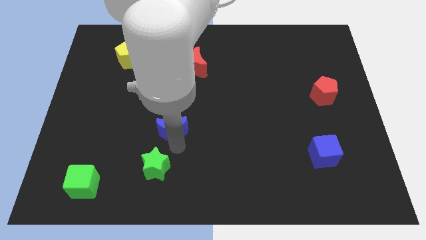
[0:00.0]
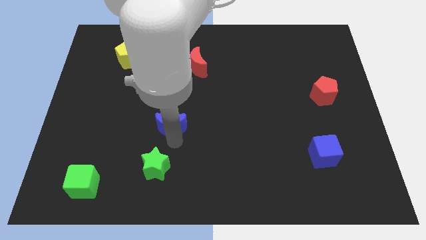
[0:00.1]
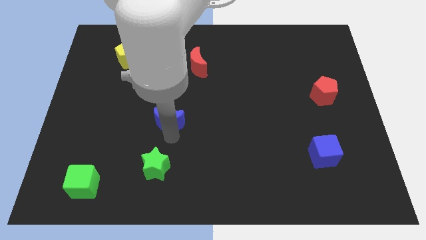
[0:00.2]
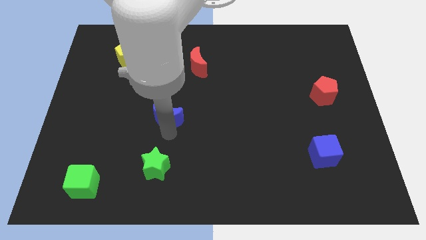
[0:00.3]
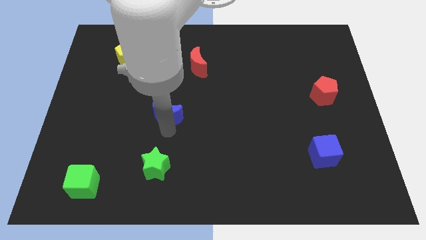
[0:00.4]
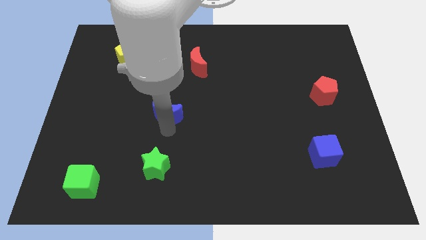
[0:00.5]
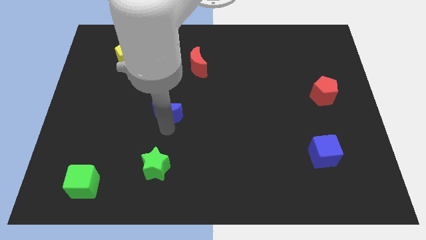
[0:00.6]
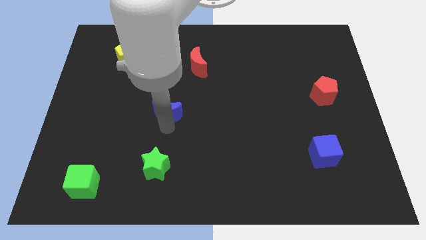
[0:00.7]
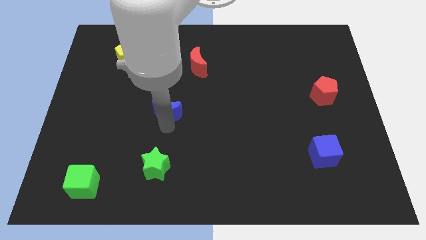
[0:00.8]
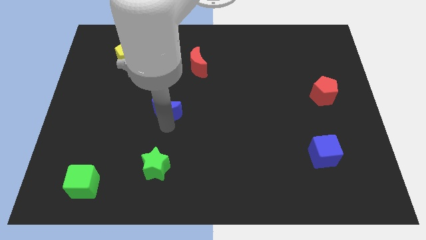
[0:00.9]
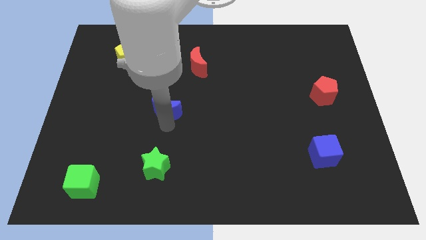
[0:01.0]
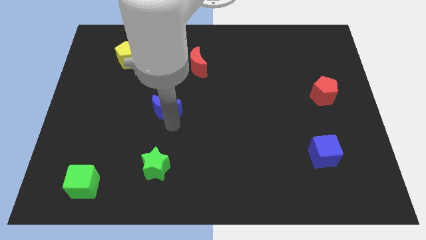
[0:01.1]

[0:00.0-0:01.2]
move blue moon above the green star

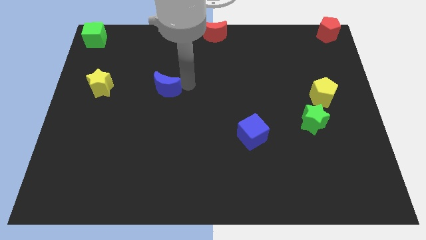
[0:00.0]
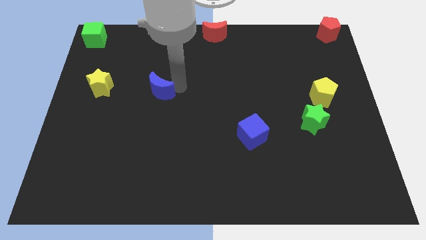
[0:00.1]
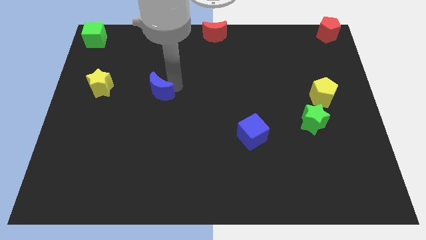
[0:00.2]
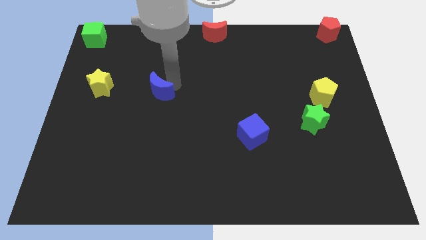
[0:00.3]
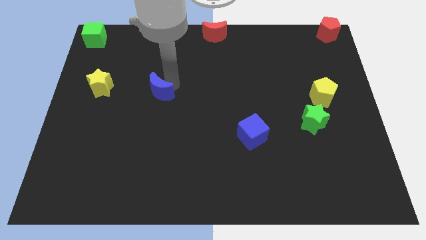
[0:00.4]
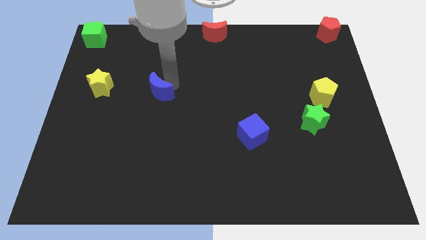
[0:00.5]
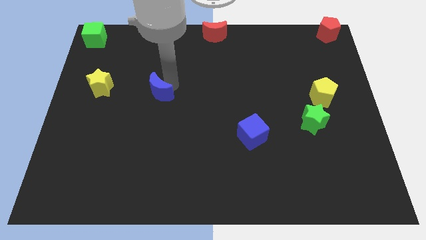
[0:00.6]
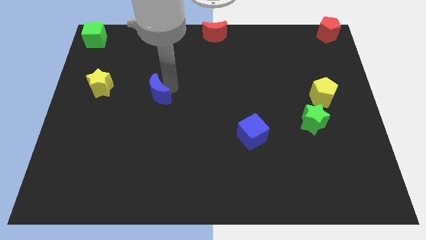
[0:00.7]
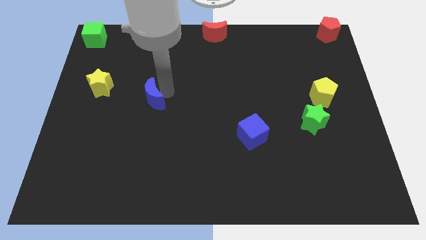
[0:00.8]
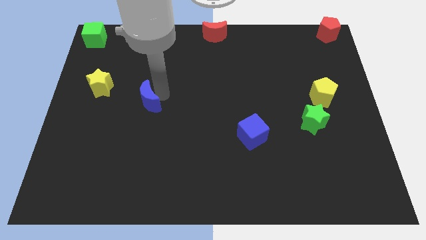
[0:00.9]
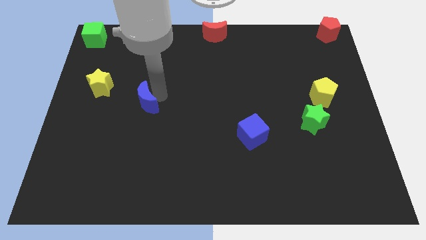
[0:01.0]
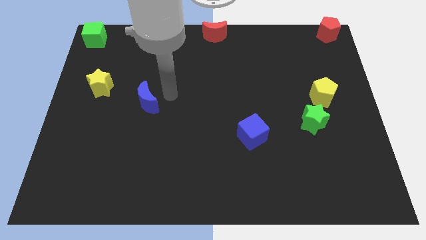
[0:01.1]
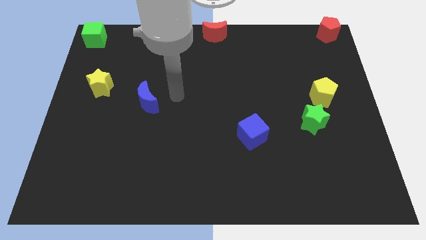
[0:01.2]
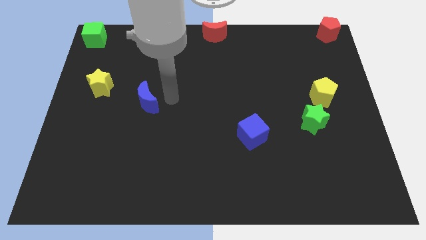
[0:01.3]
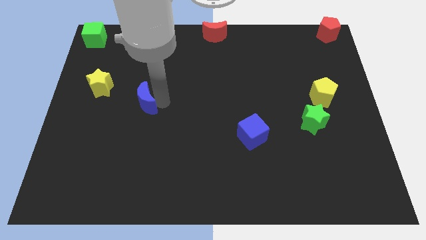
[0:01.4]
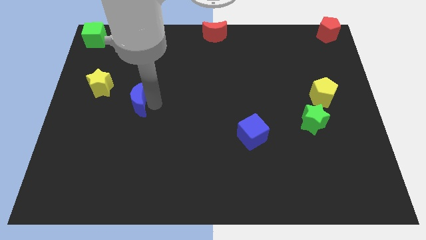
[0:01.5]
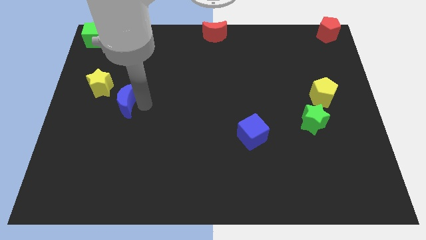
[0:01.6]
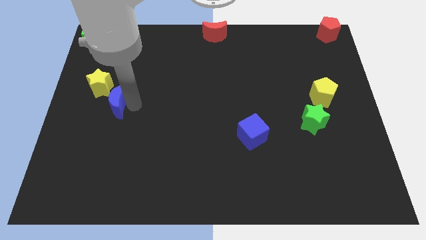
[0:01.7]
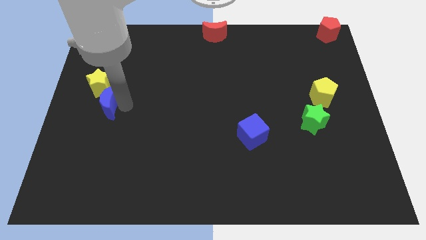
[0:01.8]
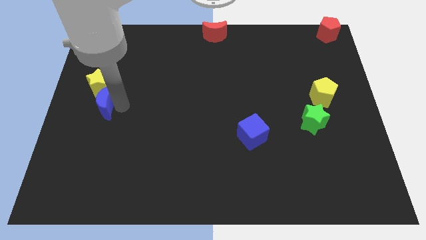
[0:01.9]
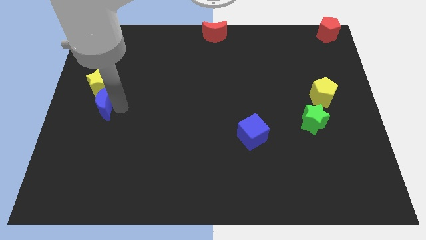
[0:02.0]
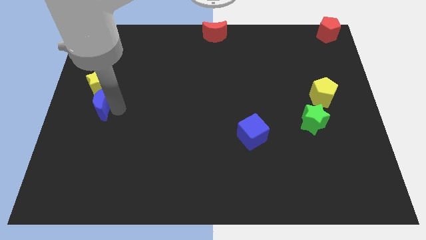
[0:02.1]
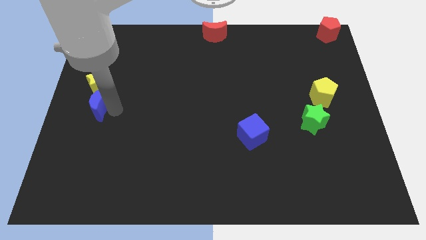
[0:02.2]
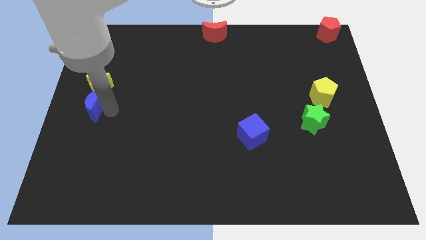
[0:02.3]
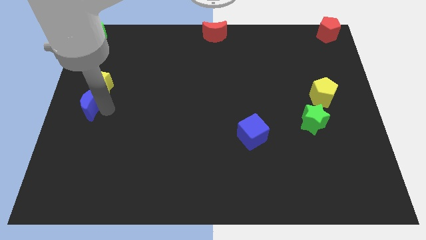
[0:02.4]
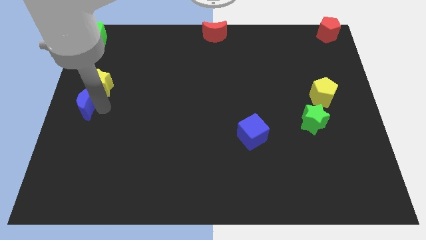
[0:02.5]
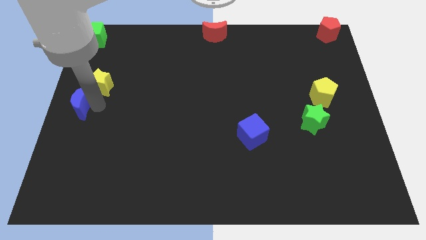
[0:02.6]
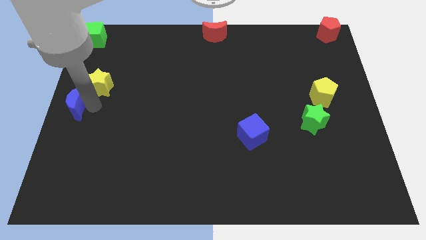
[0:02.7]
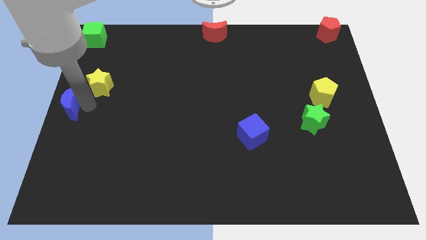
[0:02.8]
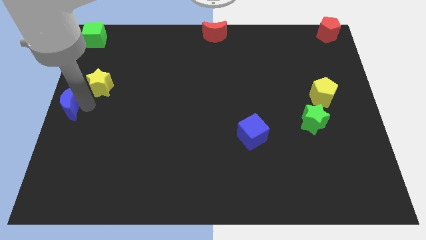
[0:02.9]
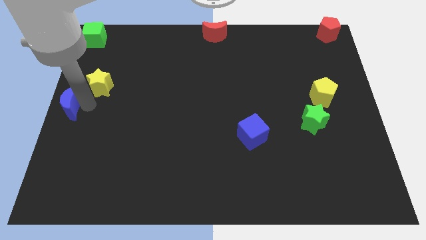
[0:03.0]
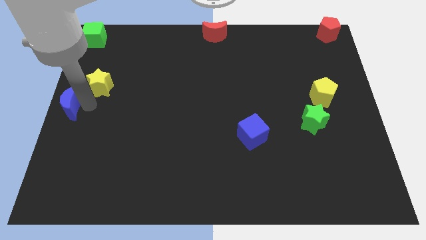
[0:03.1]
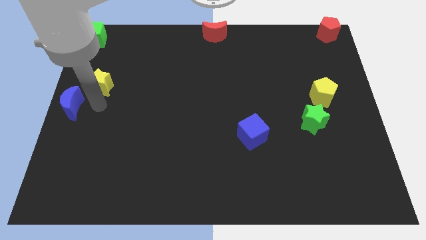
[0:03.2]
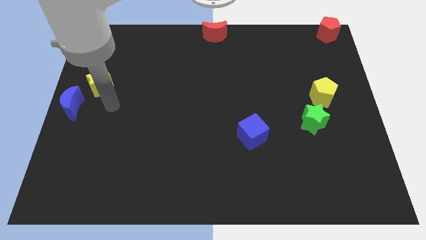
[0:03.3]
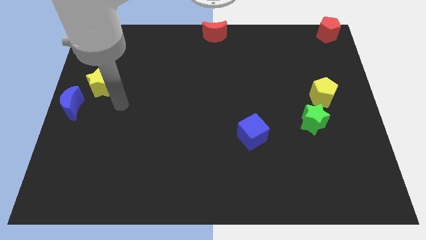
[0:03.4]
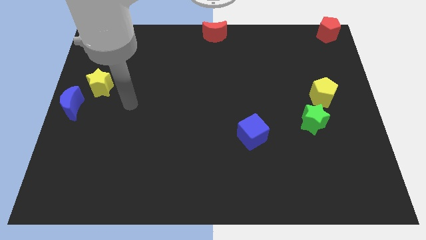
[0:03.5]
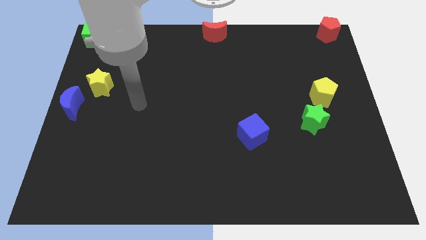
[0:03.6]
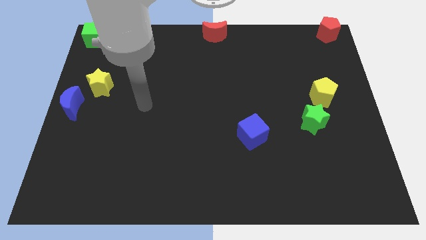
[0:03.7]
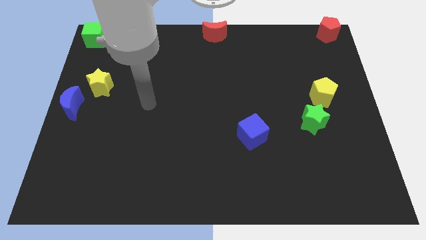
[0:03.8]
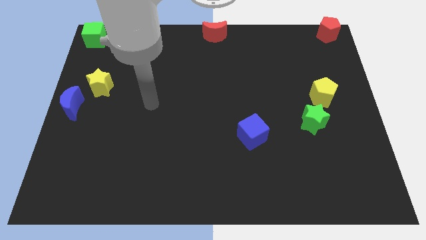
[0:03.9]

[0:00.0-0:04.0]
push the yellow moon to the center left

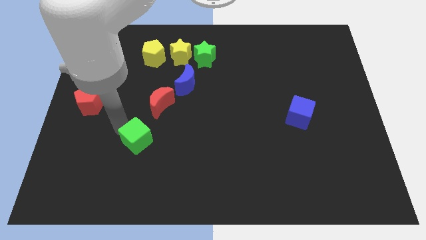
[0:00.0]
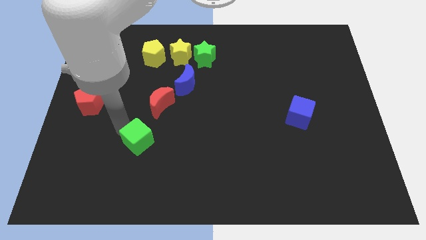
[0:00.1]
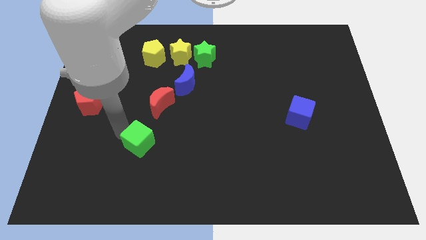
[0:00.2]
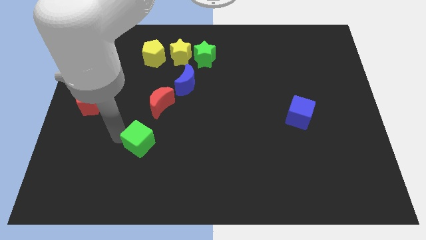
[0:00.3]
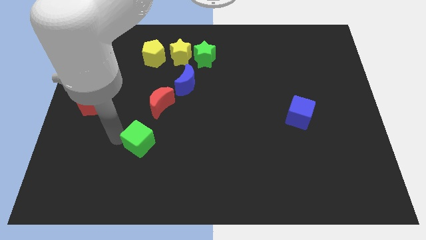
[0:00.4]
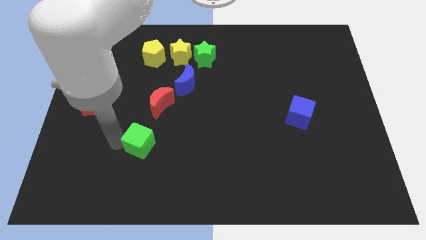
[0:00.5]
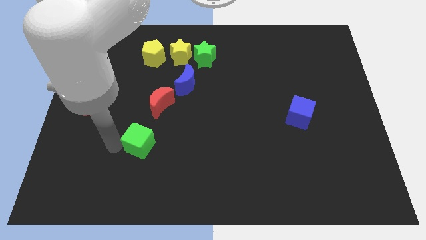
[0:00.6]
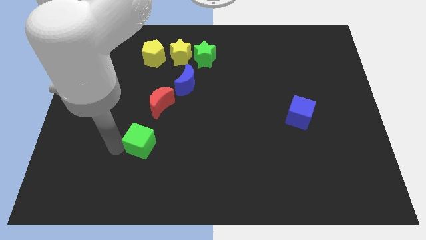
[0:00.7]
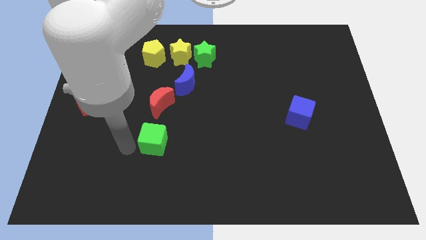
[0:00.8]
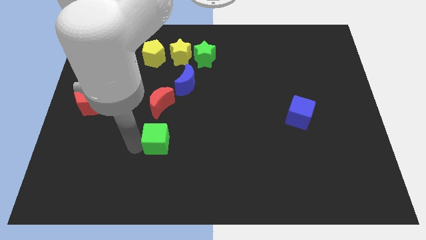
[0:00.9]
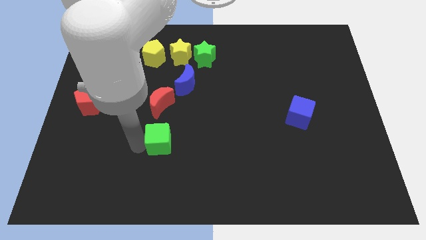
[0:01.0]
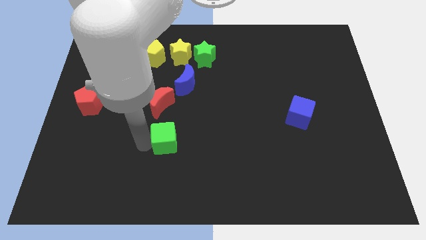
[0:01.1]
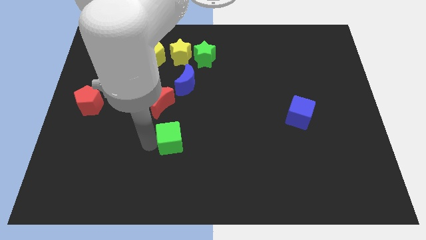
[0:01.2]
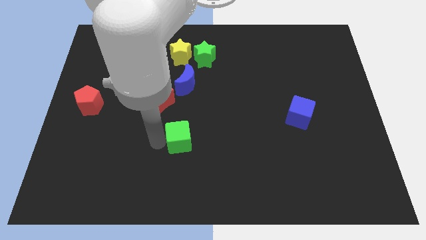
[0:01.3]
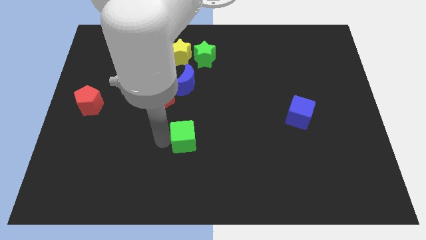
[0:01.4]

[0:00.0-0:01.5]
push the green cube below the blue crescent

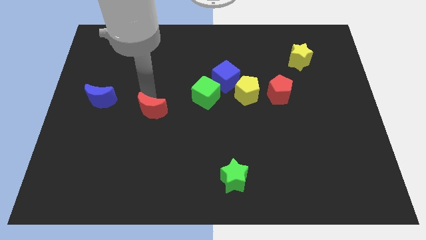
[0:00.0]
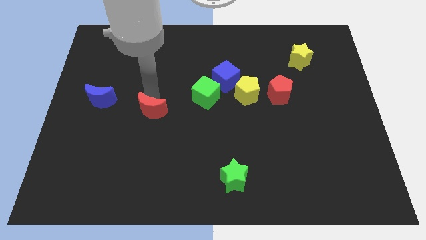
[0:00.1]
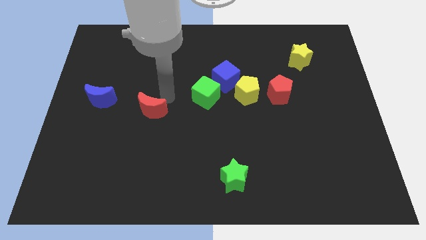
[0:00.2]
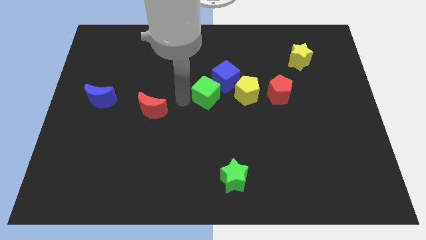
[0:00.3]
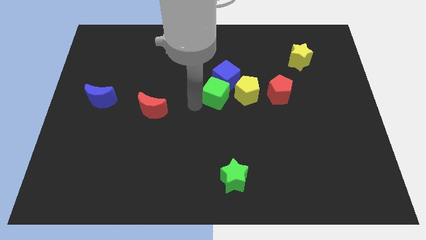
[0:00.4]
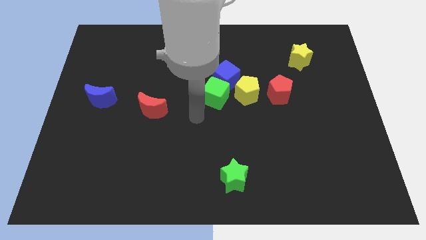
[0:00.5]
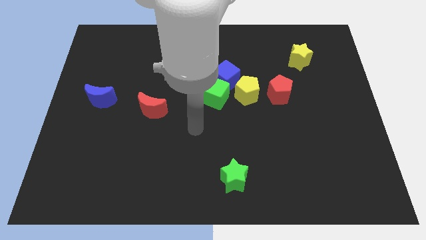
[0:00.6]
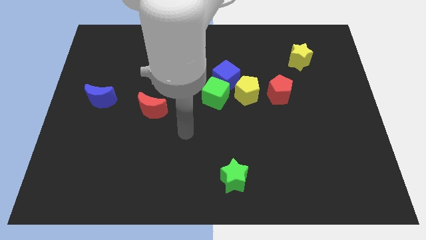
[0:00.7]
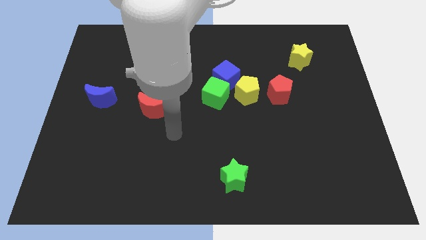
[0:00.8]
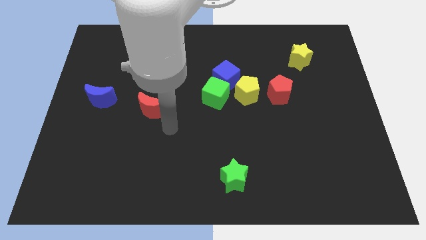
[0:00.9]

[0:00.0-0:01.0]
push the green cube into the blue cube

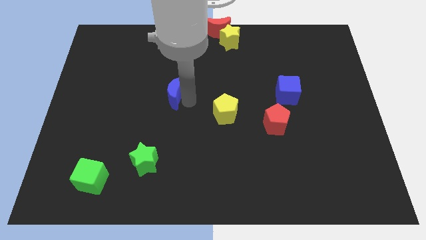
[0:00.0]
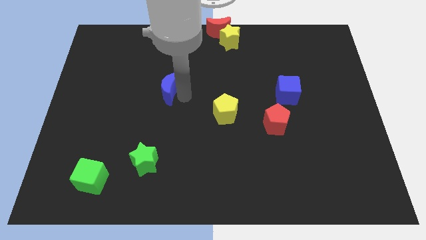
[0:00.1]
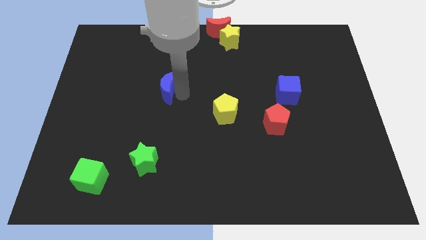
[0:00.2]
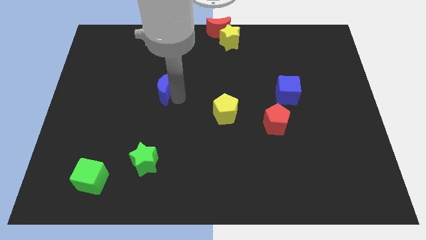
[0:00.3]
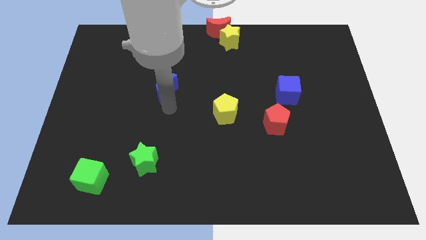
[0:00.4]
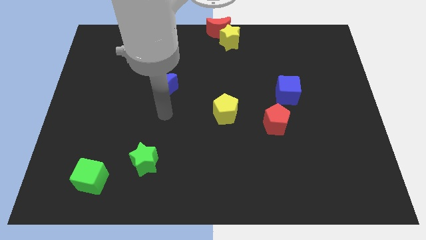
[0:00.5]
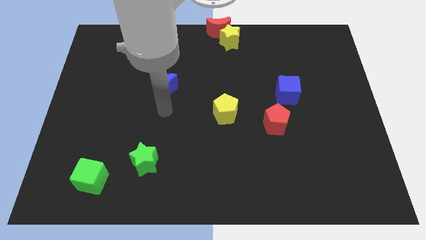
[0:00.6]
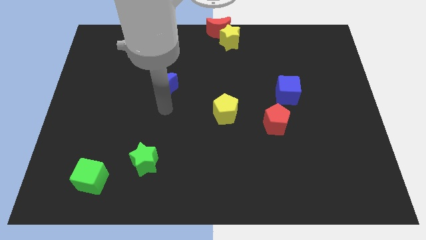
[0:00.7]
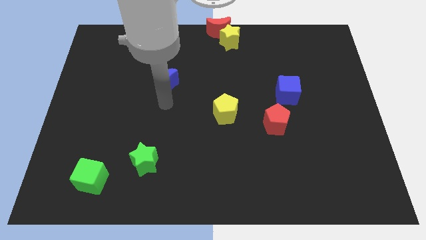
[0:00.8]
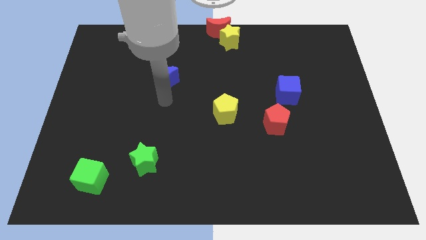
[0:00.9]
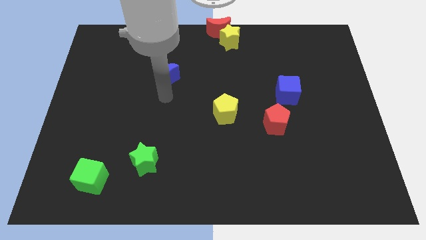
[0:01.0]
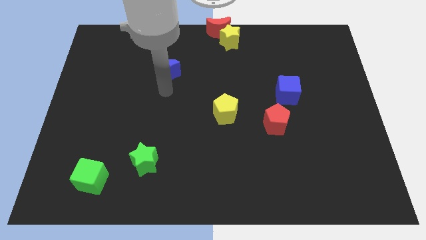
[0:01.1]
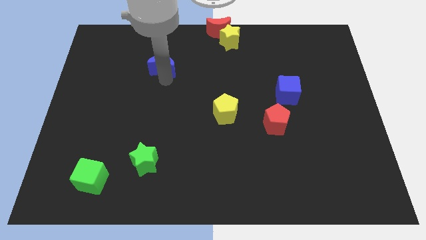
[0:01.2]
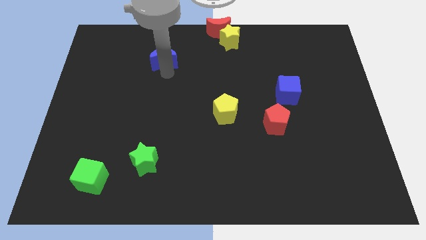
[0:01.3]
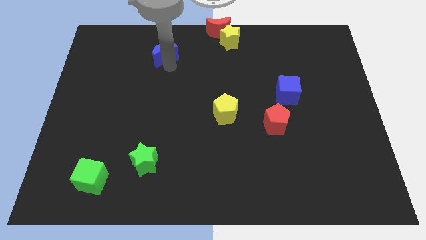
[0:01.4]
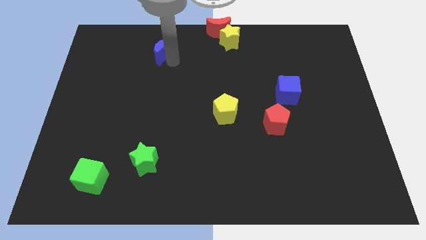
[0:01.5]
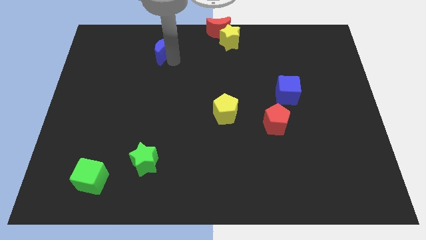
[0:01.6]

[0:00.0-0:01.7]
move the blue moon slightly to the top
